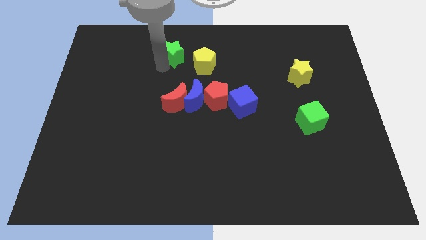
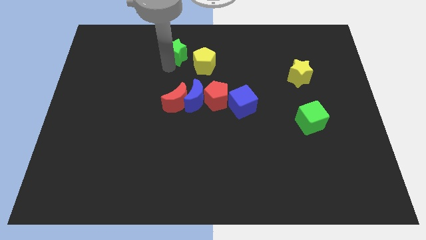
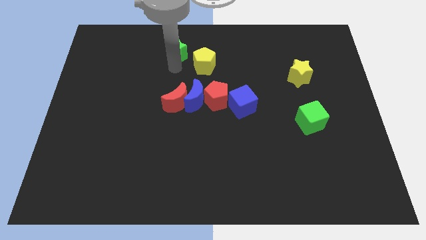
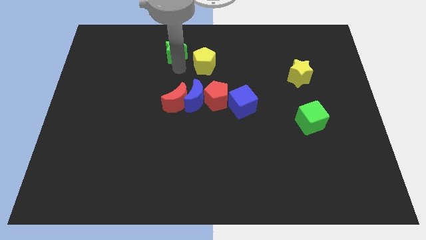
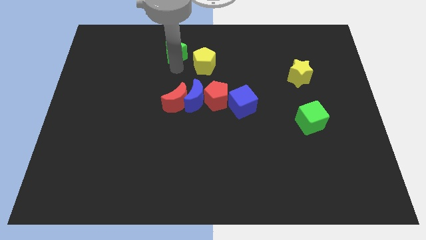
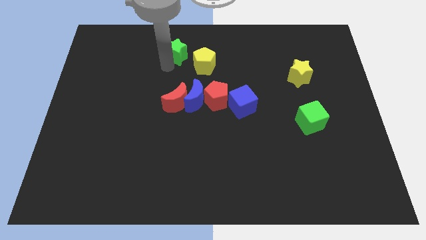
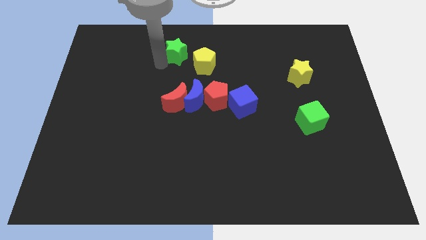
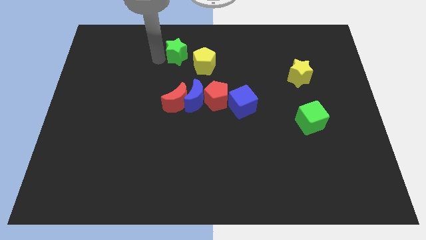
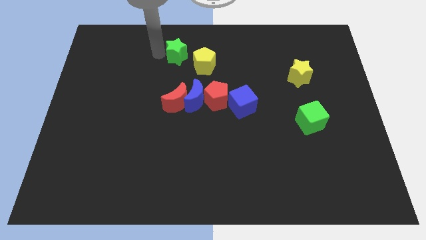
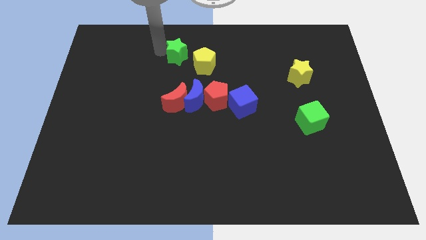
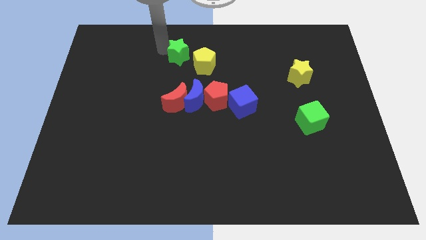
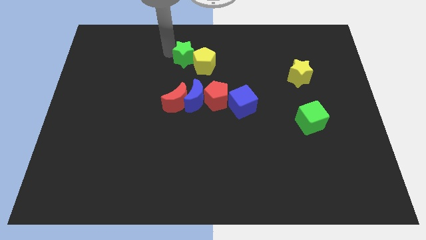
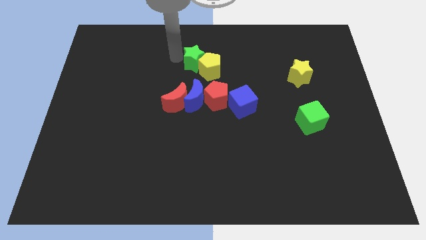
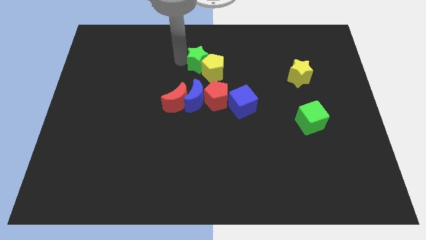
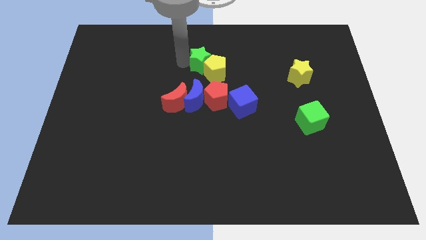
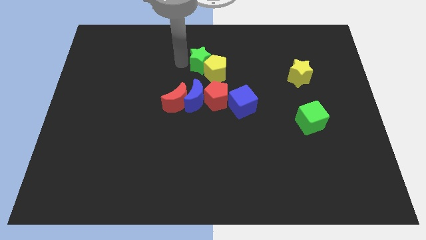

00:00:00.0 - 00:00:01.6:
push the yellow pentagon with green star to the top of the red pentagon

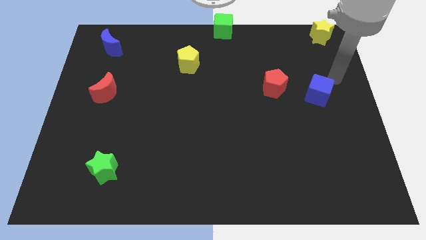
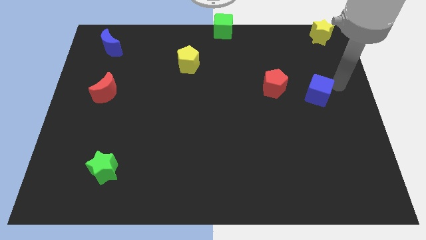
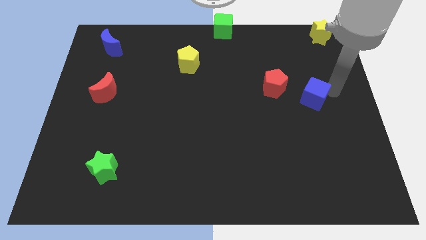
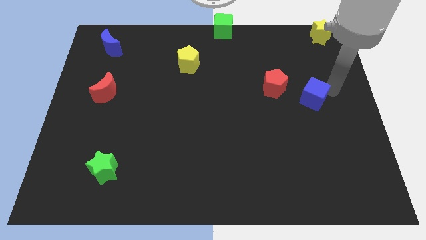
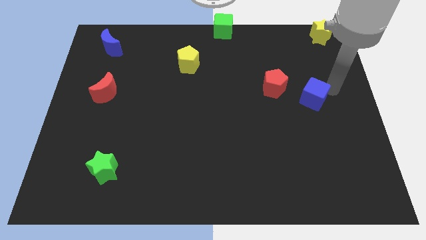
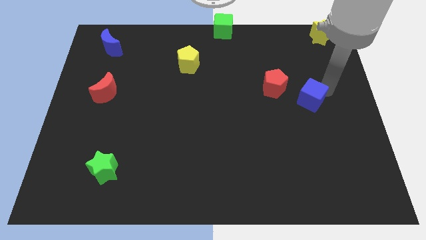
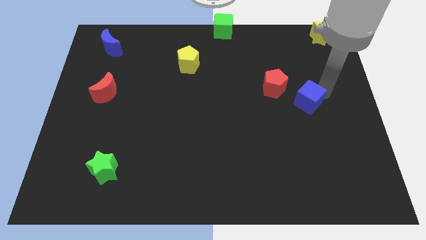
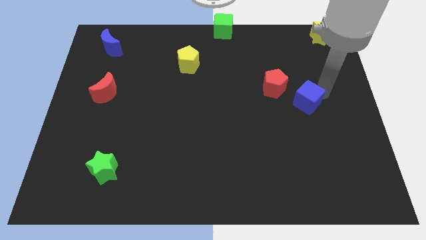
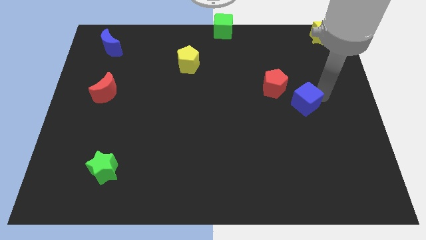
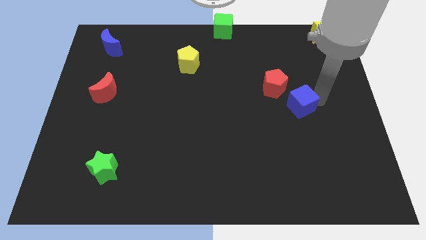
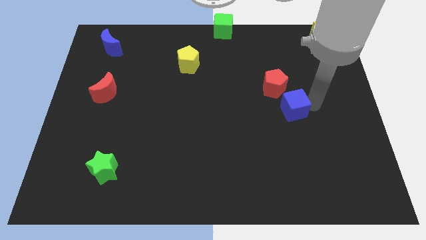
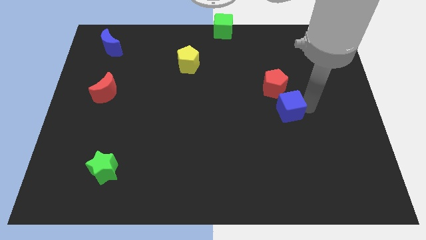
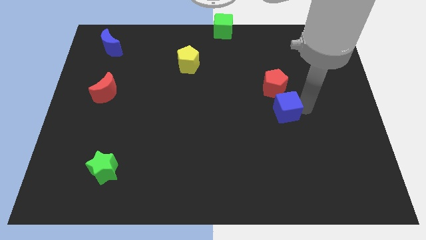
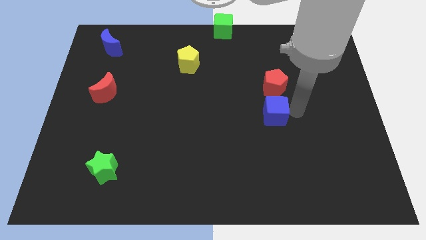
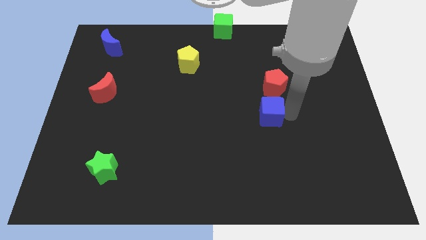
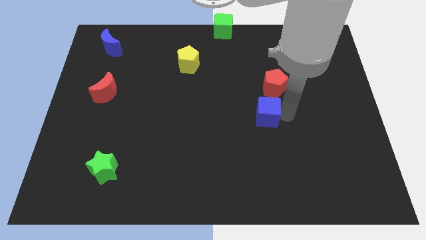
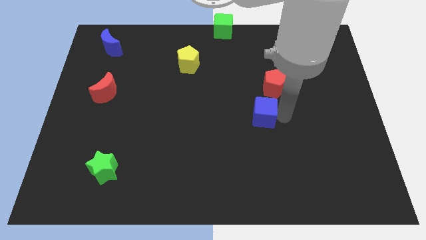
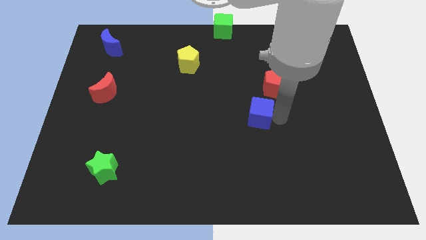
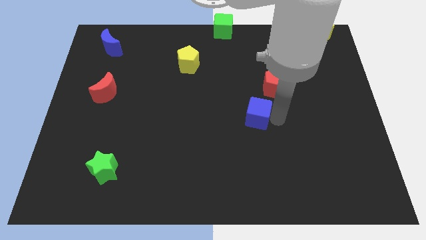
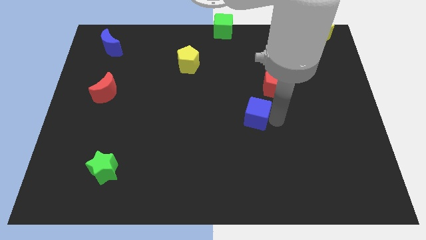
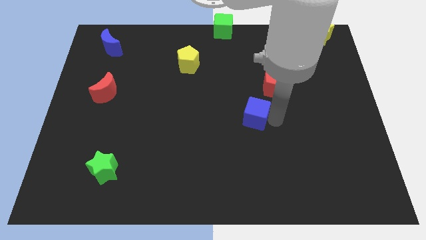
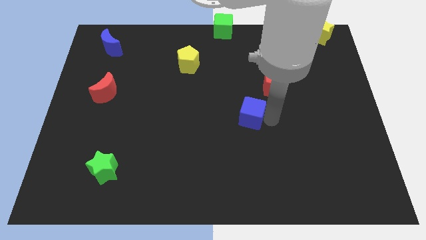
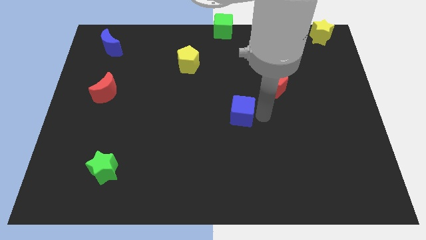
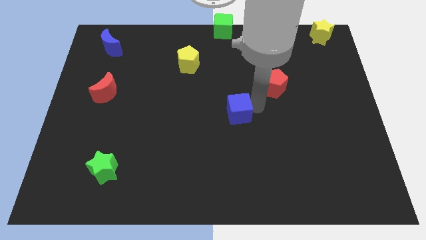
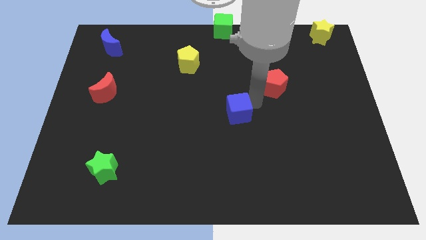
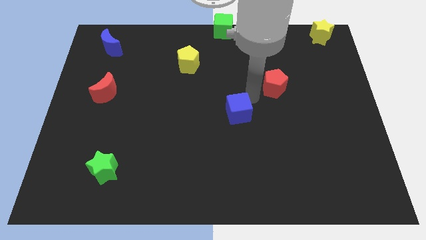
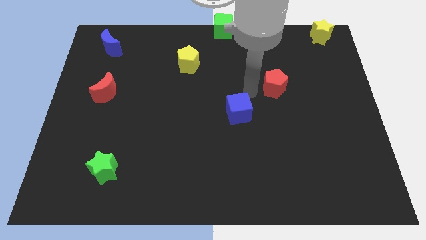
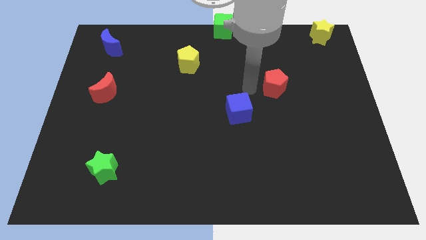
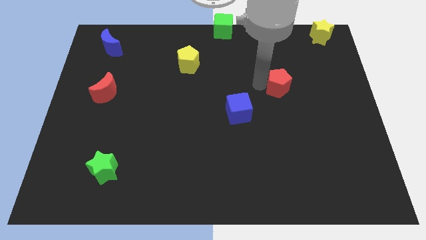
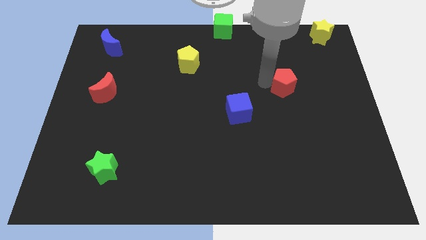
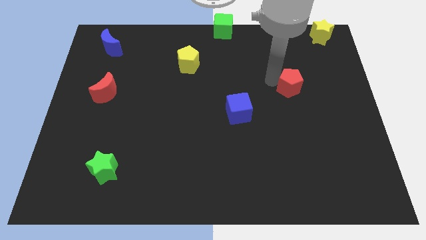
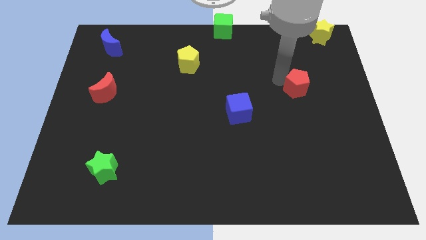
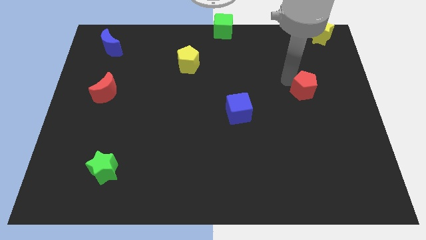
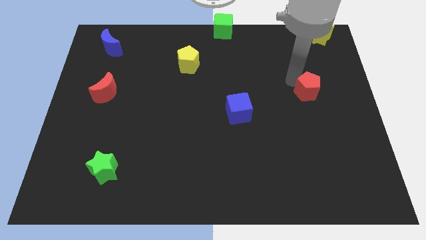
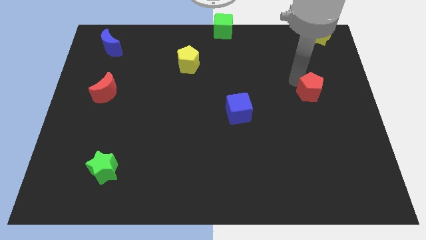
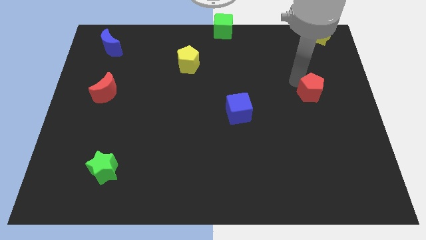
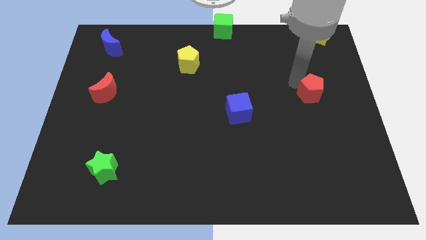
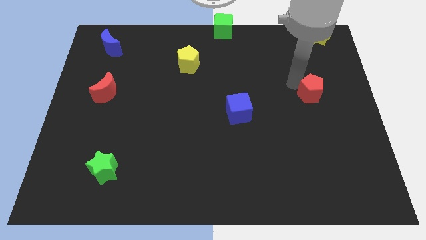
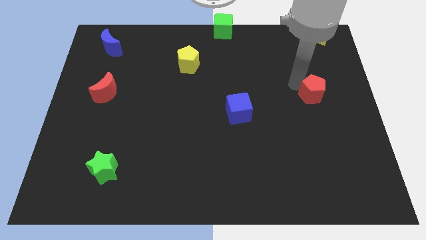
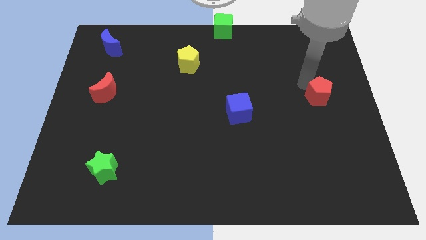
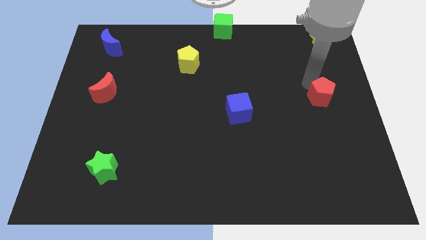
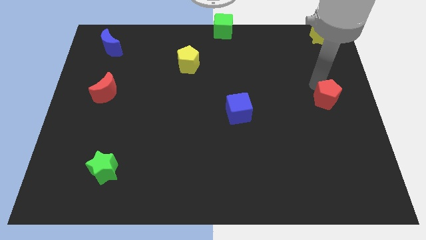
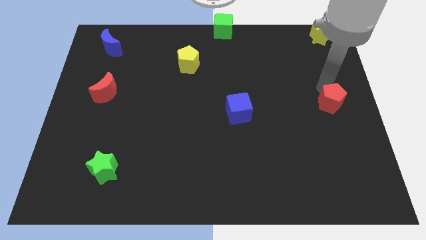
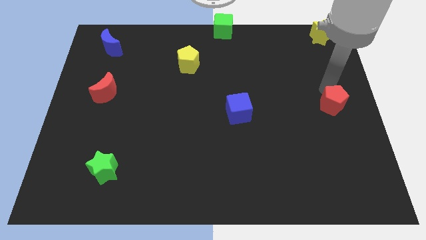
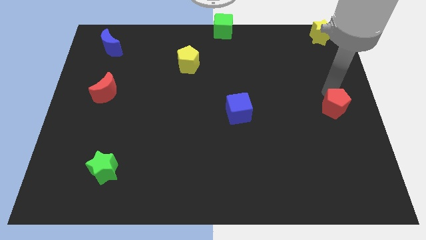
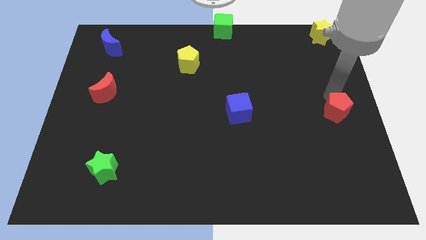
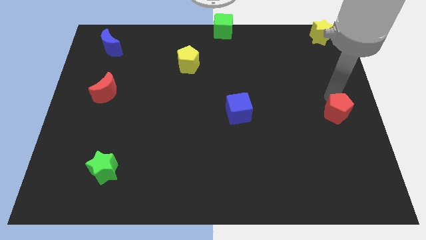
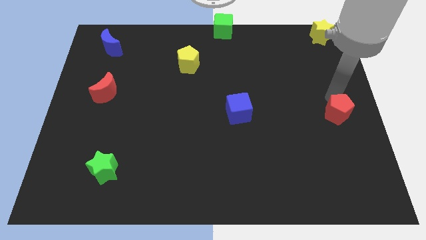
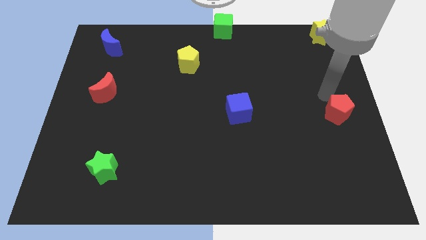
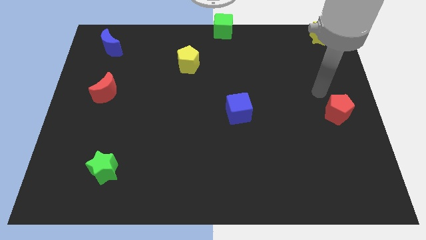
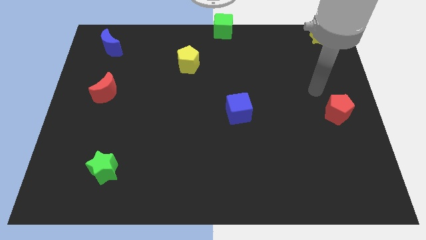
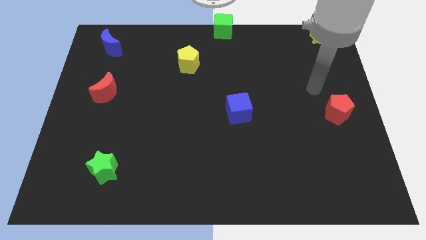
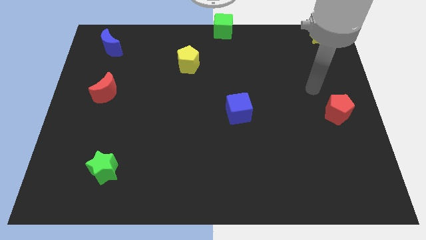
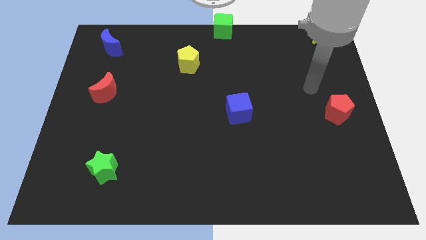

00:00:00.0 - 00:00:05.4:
place the blue cube and red pentagon parallel to each other

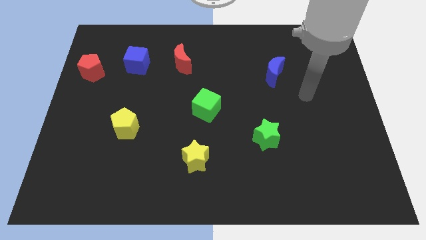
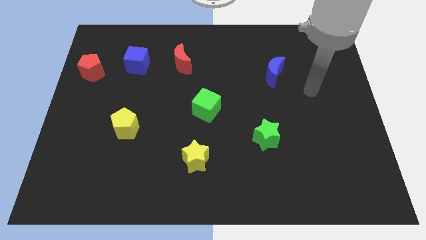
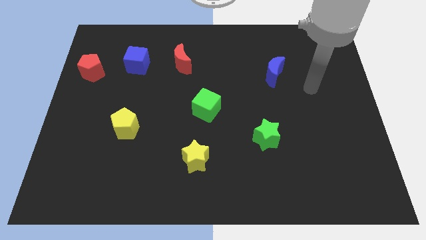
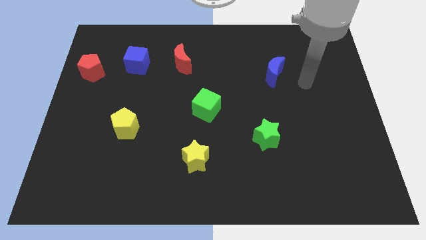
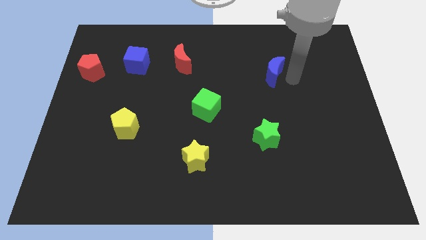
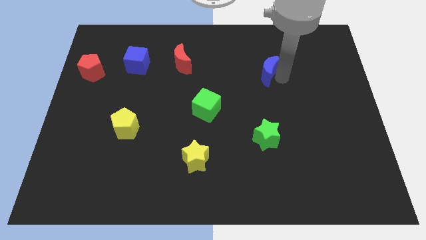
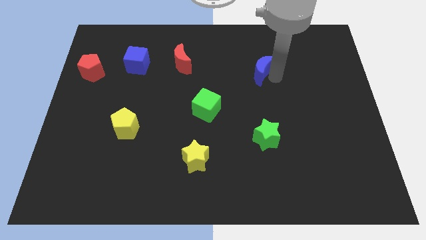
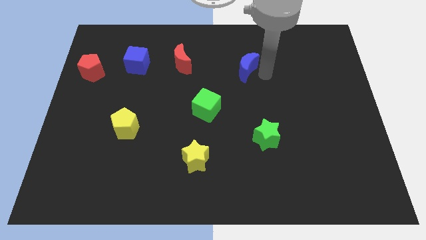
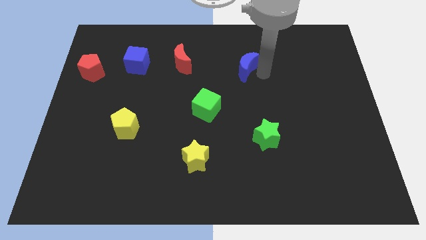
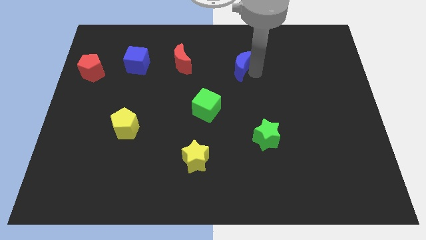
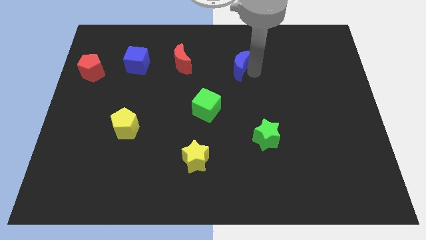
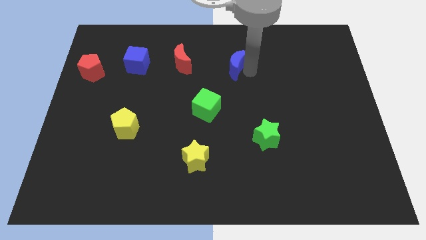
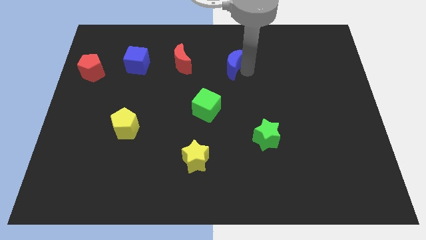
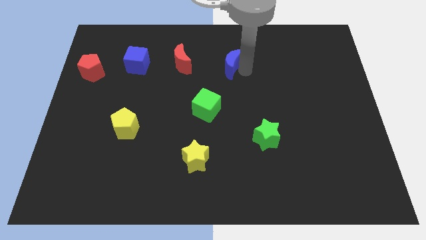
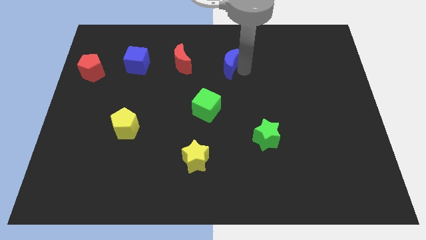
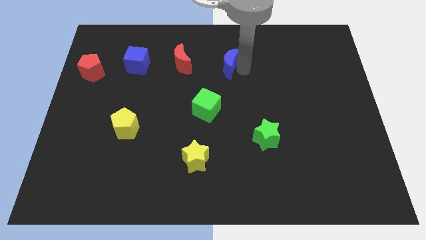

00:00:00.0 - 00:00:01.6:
slide the blue moon diagonally top left to the green star

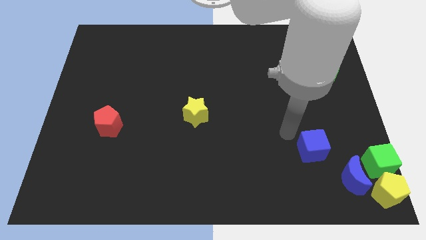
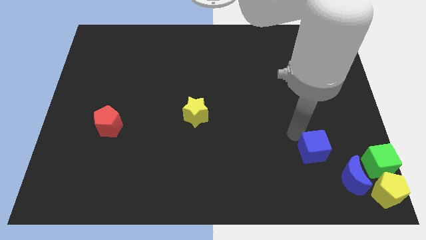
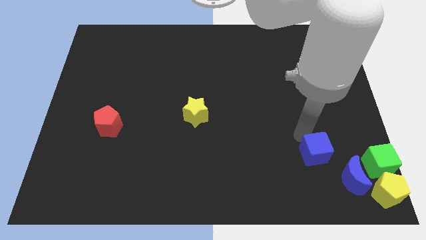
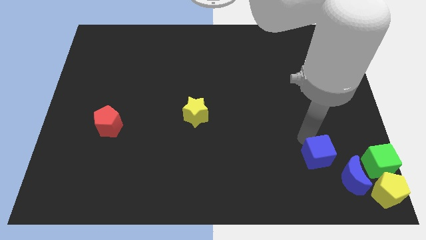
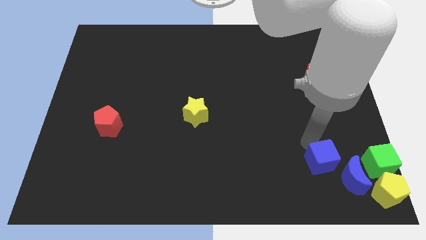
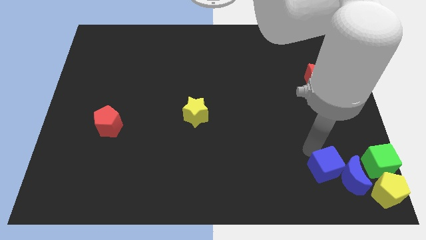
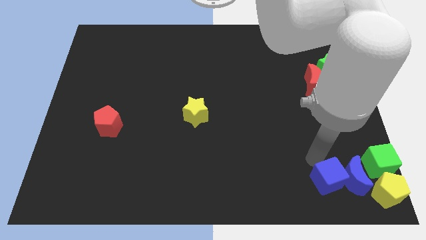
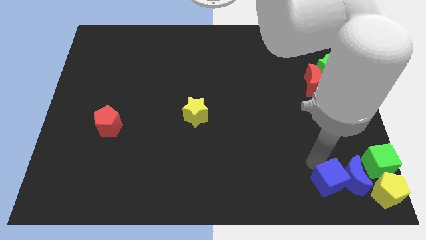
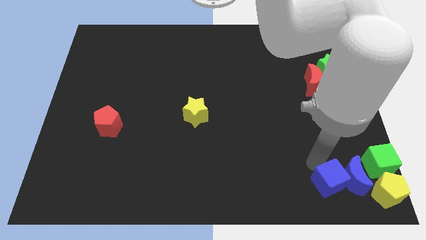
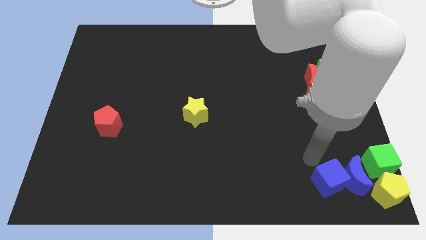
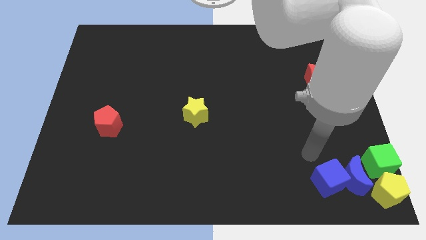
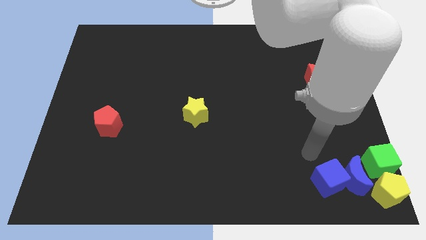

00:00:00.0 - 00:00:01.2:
move the blue cube towards the lefts side of the blue crescent
